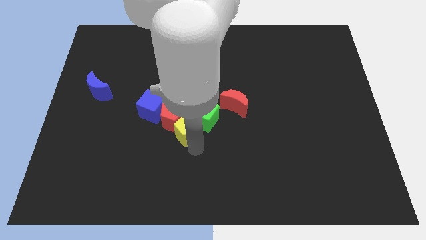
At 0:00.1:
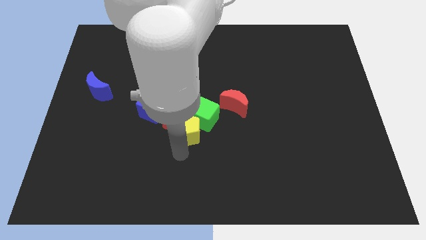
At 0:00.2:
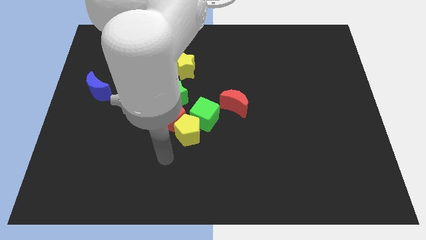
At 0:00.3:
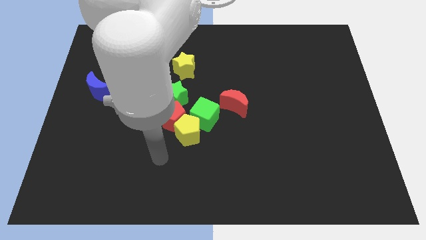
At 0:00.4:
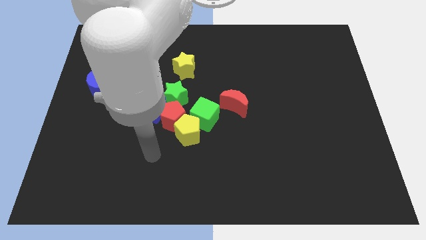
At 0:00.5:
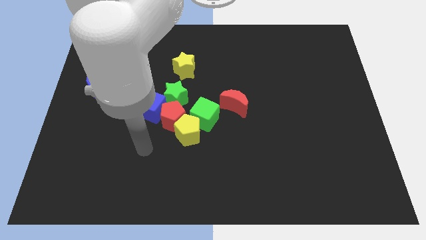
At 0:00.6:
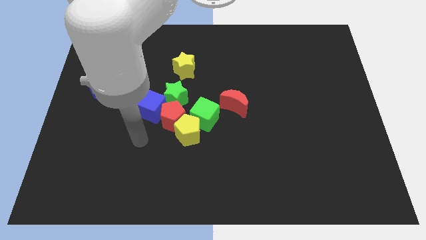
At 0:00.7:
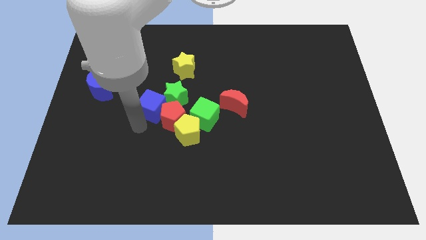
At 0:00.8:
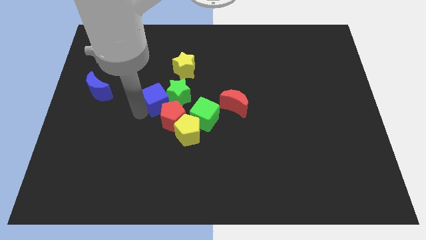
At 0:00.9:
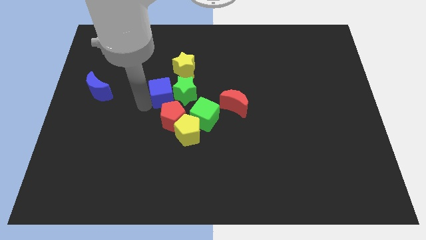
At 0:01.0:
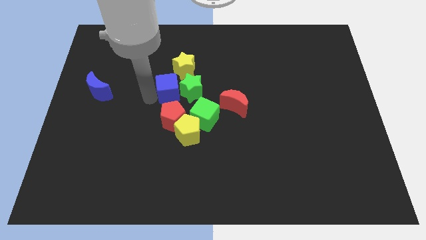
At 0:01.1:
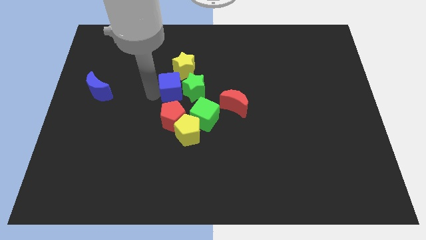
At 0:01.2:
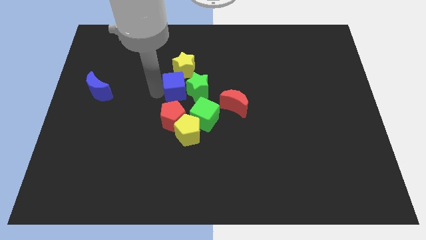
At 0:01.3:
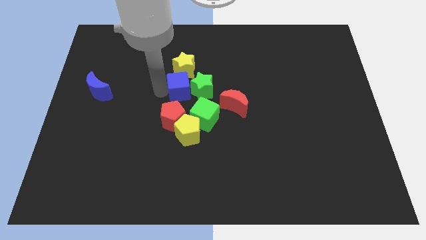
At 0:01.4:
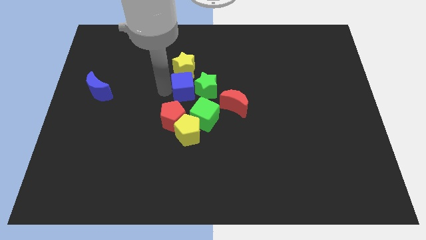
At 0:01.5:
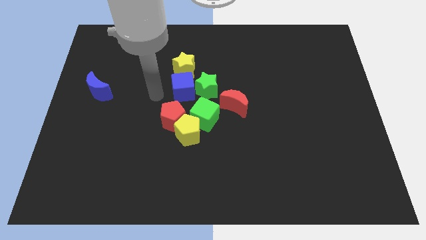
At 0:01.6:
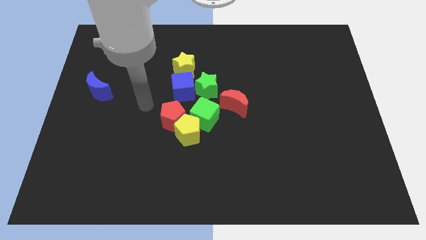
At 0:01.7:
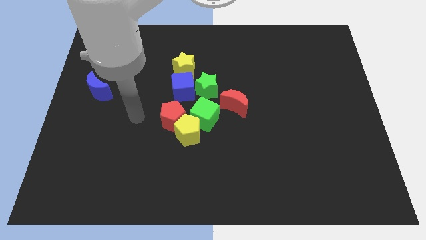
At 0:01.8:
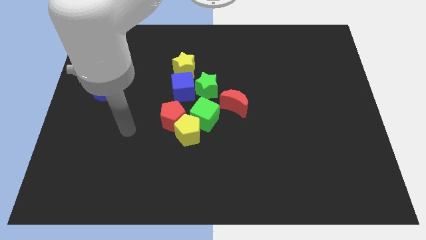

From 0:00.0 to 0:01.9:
place the blue cube below the yellow star

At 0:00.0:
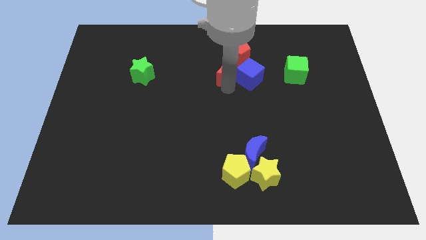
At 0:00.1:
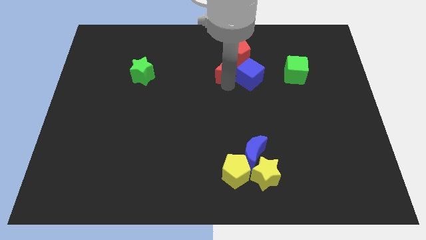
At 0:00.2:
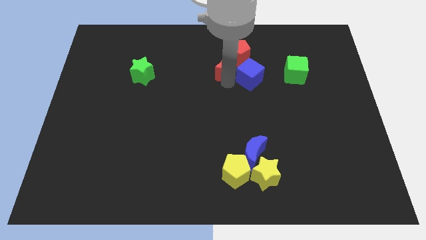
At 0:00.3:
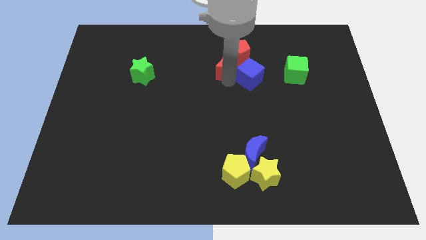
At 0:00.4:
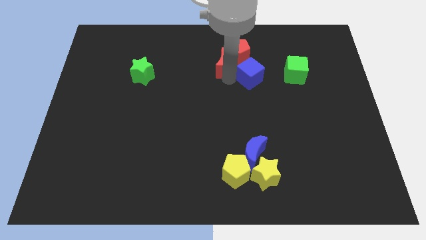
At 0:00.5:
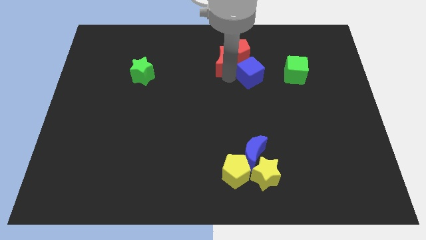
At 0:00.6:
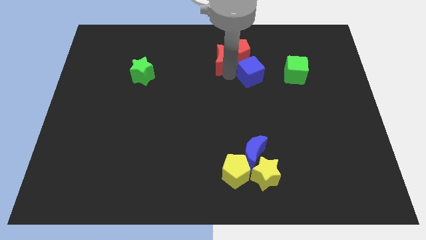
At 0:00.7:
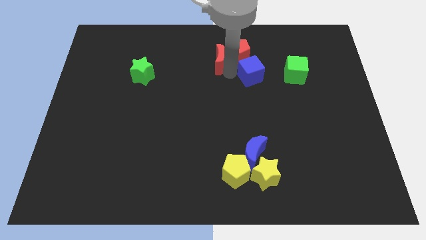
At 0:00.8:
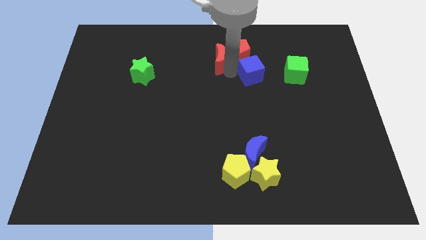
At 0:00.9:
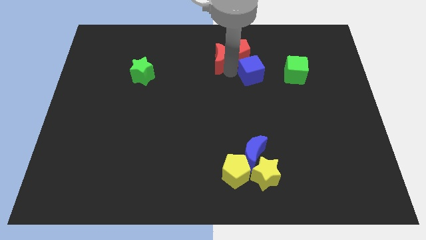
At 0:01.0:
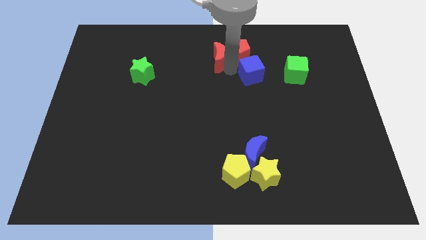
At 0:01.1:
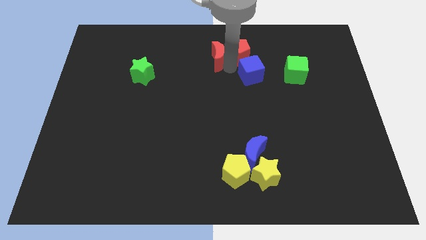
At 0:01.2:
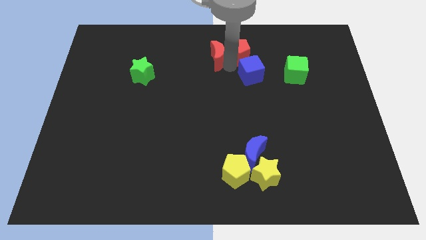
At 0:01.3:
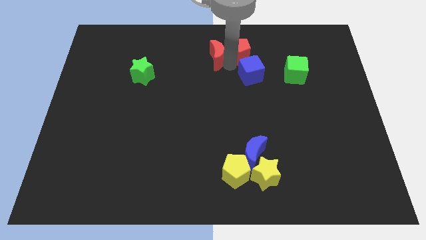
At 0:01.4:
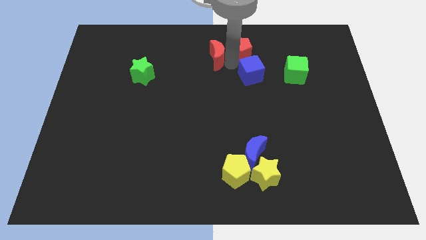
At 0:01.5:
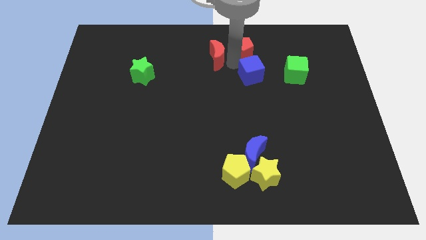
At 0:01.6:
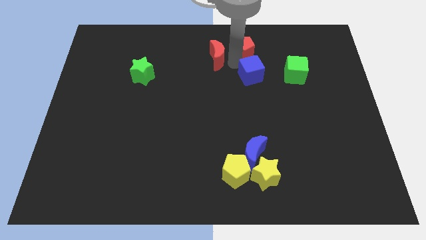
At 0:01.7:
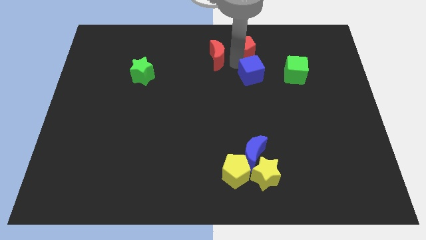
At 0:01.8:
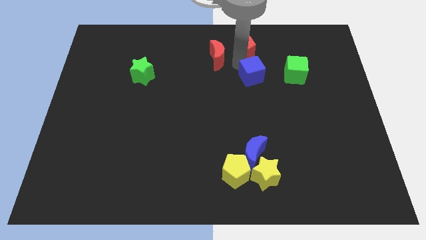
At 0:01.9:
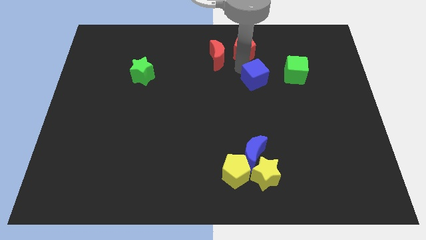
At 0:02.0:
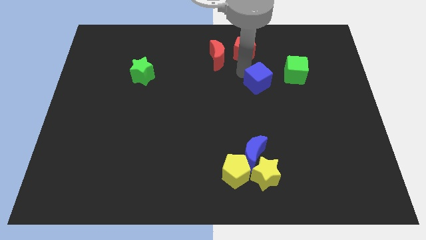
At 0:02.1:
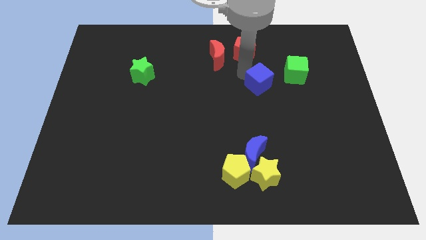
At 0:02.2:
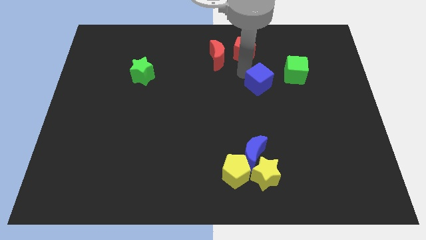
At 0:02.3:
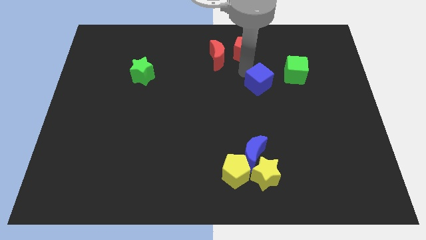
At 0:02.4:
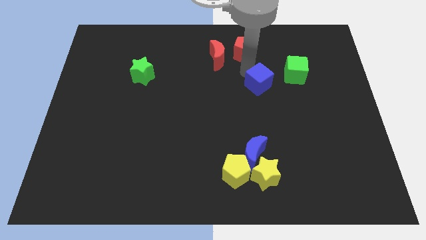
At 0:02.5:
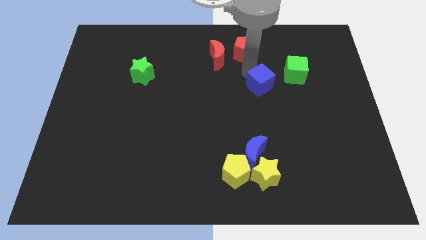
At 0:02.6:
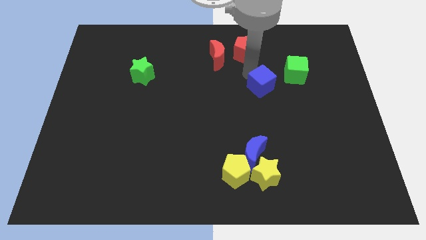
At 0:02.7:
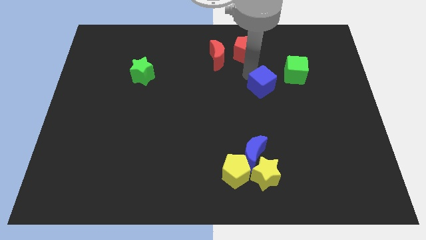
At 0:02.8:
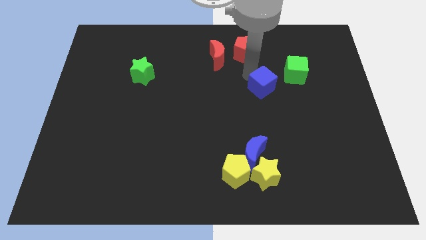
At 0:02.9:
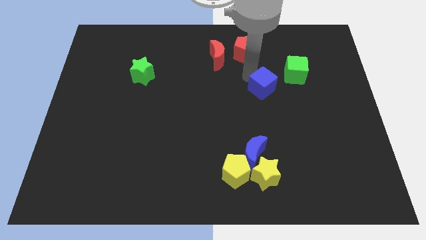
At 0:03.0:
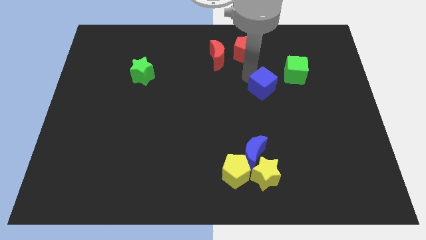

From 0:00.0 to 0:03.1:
separate the blue cube from red crescent

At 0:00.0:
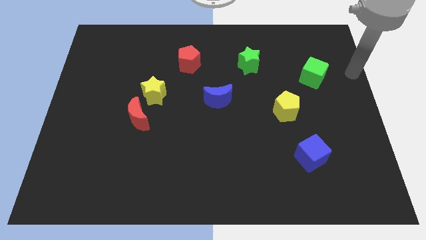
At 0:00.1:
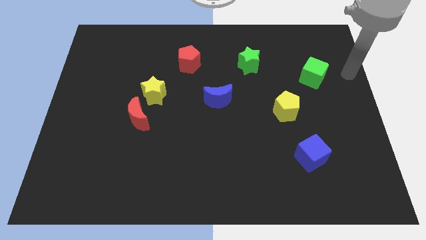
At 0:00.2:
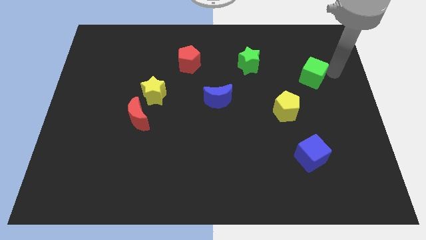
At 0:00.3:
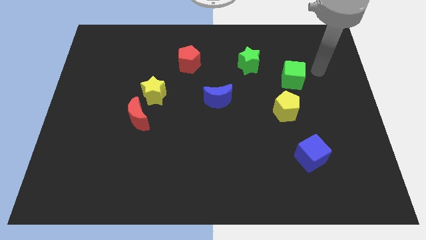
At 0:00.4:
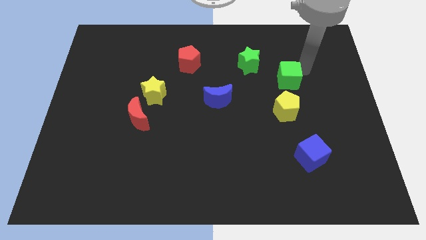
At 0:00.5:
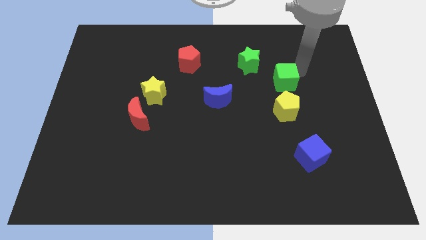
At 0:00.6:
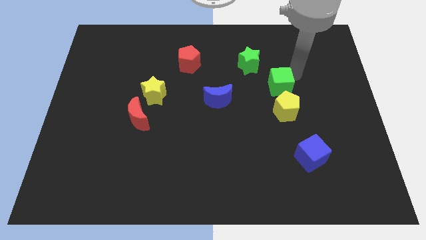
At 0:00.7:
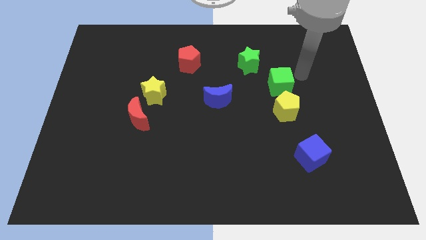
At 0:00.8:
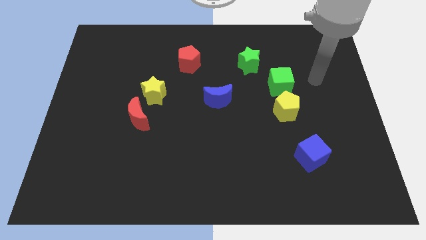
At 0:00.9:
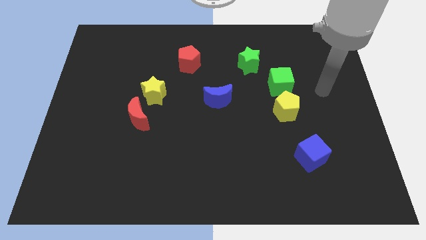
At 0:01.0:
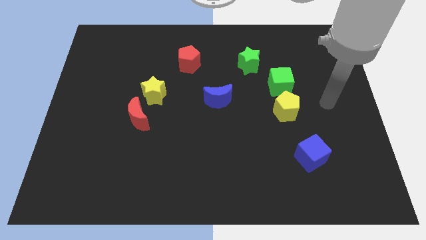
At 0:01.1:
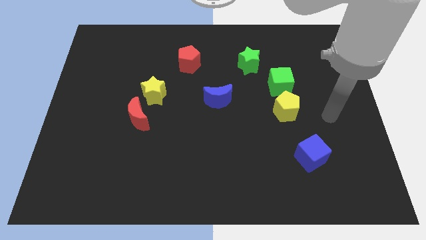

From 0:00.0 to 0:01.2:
place green cube above yellow pentagon

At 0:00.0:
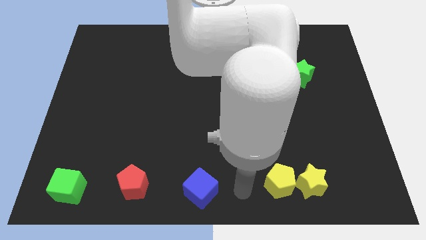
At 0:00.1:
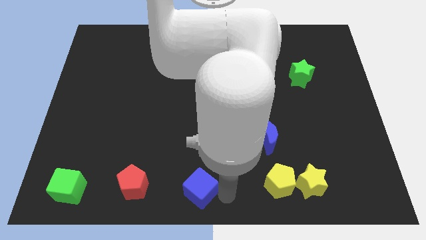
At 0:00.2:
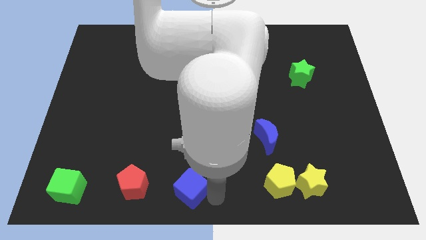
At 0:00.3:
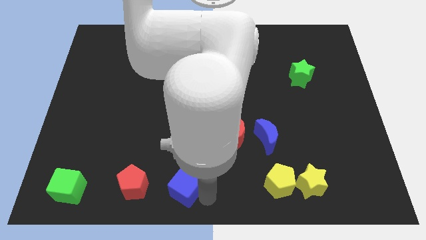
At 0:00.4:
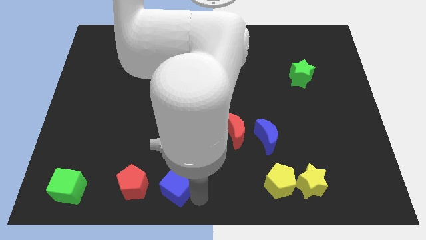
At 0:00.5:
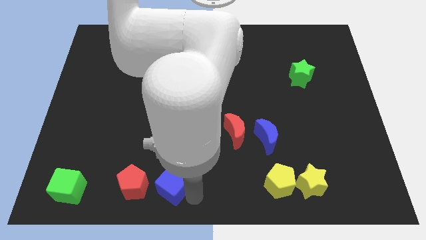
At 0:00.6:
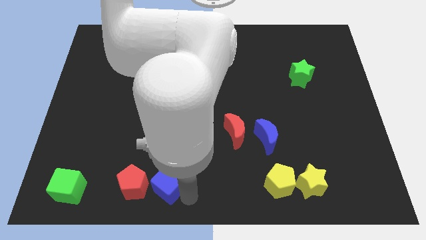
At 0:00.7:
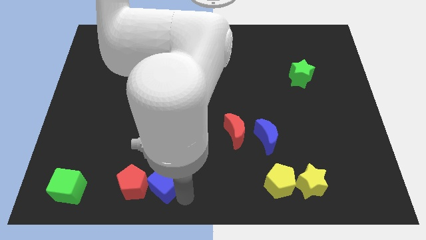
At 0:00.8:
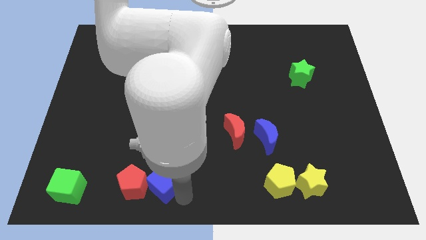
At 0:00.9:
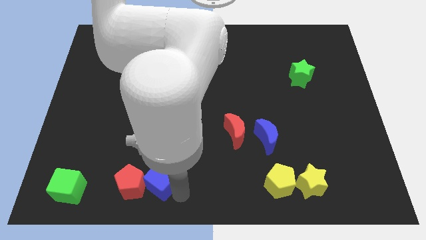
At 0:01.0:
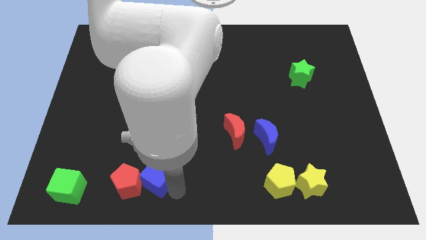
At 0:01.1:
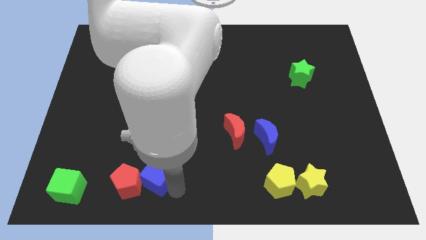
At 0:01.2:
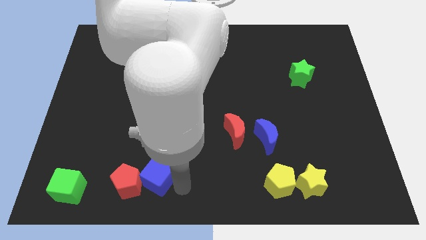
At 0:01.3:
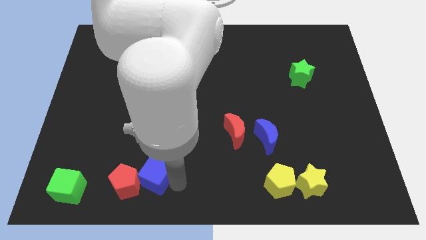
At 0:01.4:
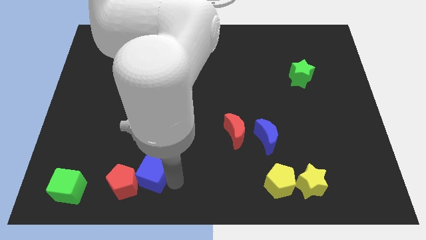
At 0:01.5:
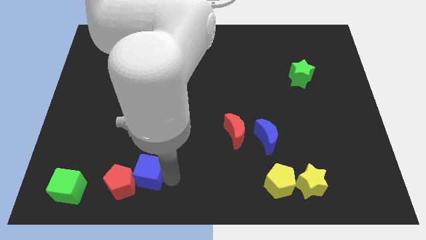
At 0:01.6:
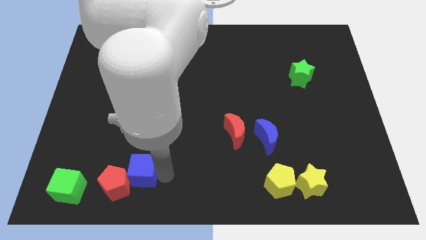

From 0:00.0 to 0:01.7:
place blue cube to the right side of the red pentagon

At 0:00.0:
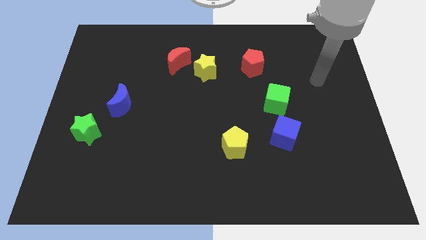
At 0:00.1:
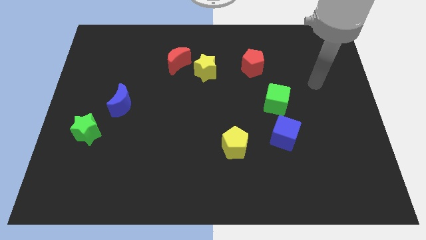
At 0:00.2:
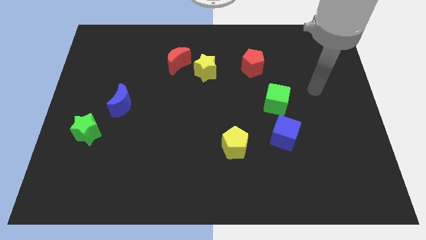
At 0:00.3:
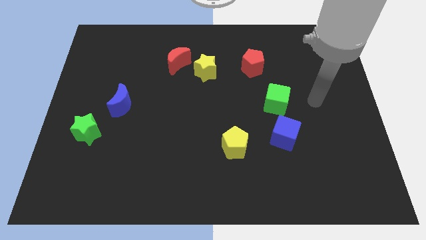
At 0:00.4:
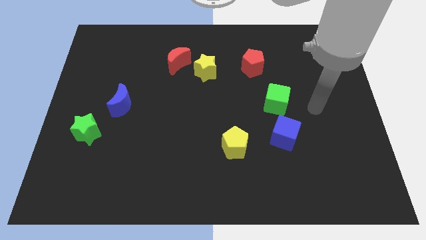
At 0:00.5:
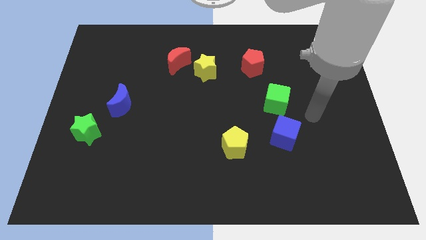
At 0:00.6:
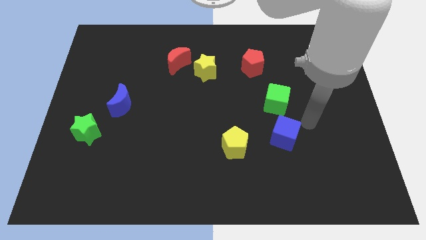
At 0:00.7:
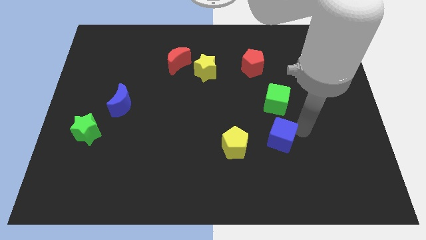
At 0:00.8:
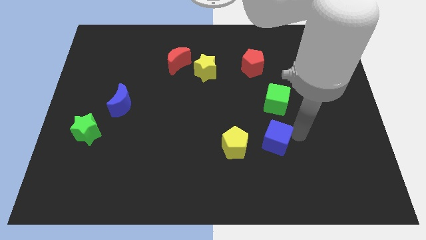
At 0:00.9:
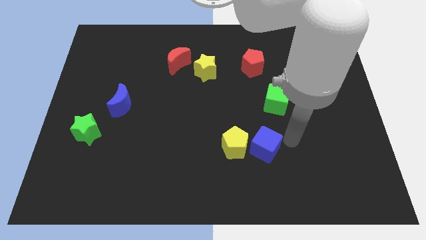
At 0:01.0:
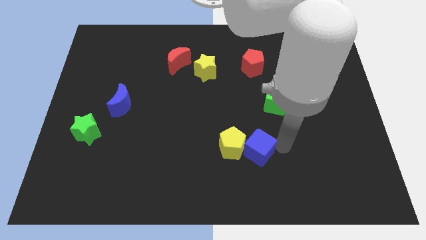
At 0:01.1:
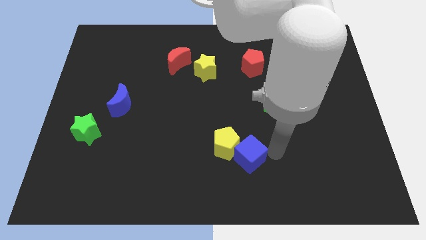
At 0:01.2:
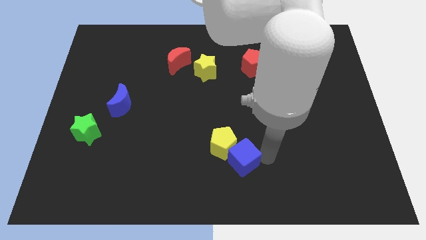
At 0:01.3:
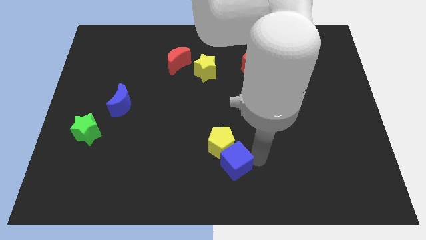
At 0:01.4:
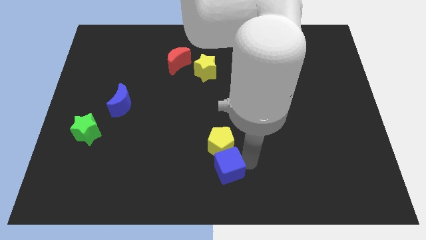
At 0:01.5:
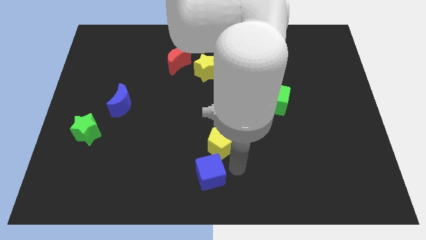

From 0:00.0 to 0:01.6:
push the blue cube near the yellow pentagon
